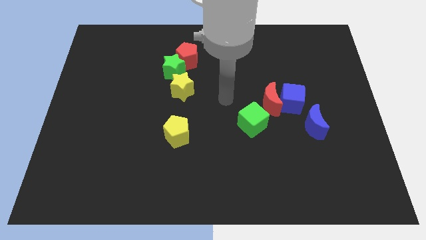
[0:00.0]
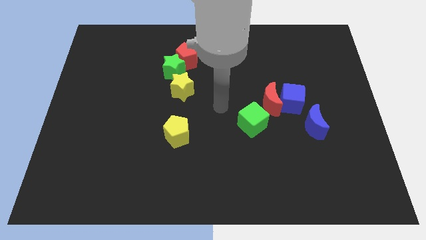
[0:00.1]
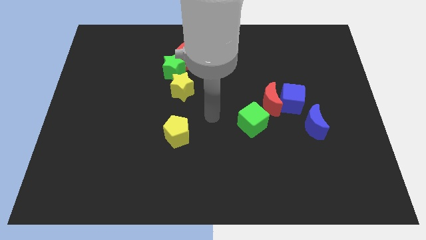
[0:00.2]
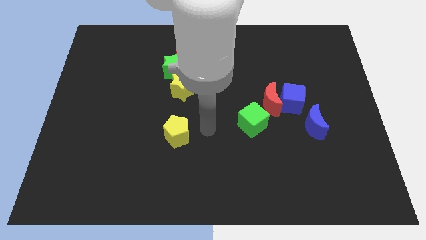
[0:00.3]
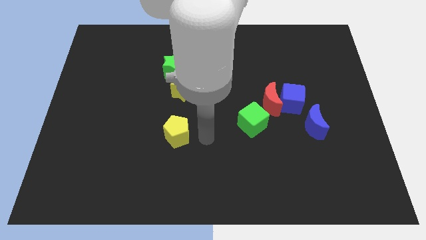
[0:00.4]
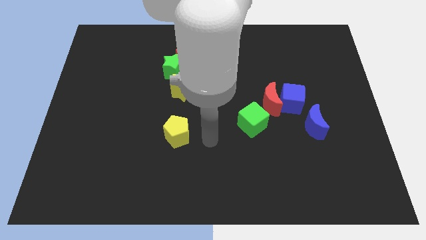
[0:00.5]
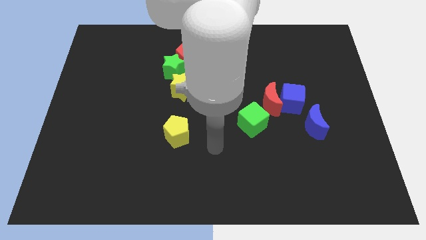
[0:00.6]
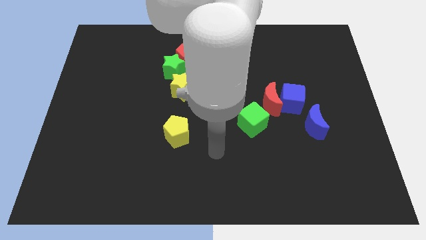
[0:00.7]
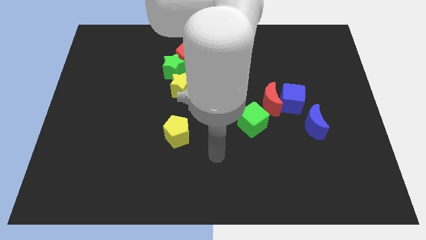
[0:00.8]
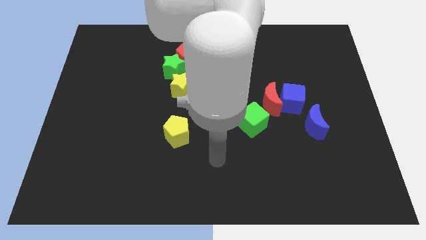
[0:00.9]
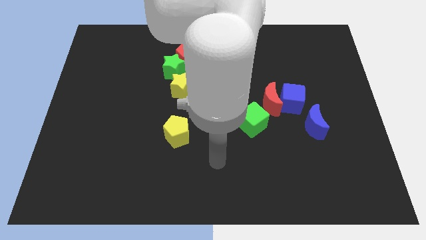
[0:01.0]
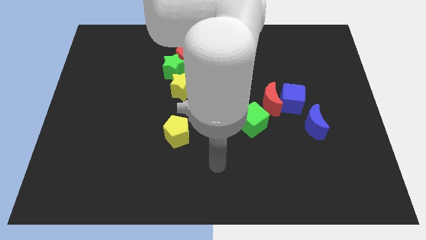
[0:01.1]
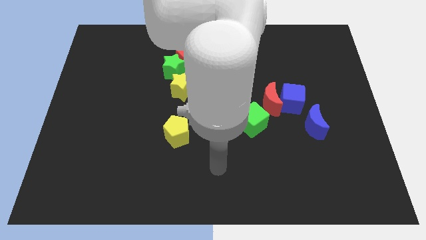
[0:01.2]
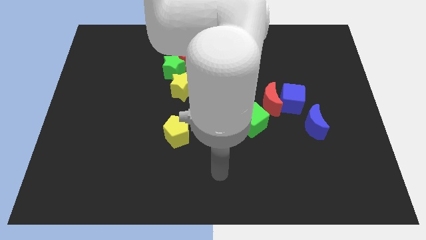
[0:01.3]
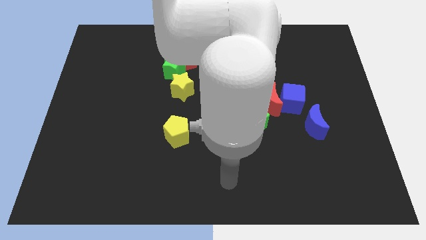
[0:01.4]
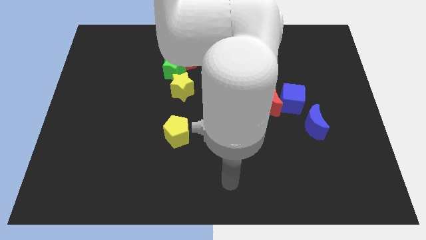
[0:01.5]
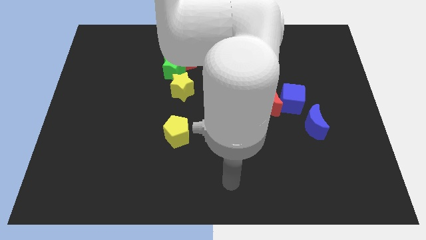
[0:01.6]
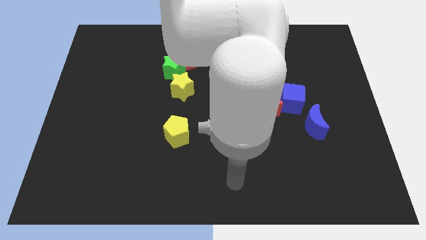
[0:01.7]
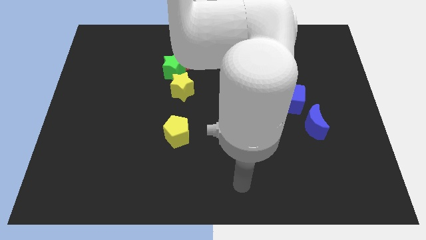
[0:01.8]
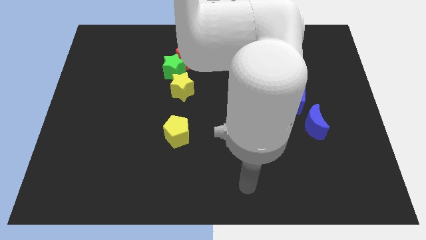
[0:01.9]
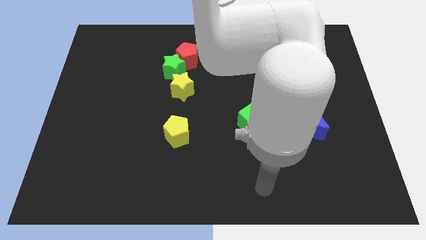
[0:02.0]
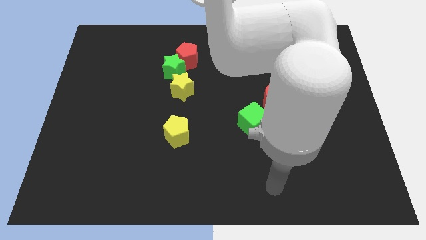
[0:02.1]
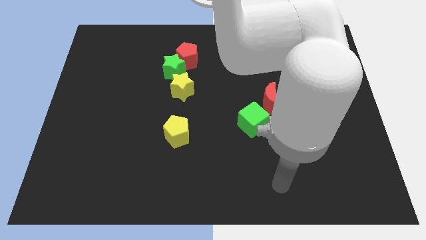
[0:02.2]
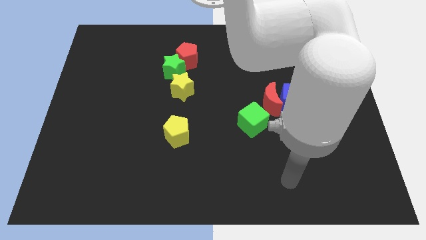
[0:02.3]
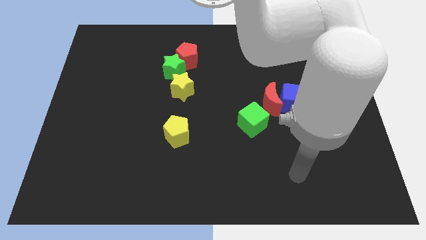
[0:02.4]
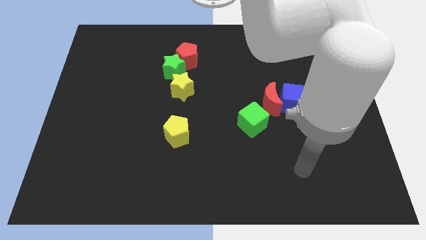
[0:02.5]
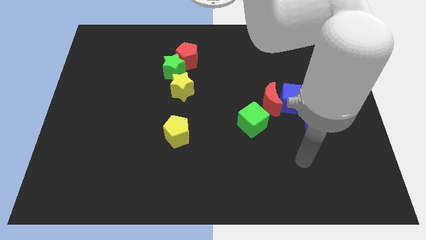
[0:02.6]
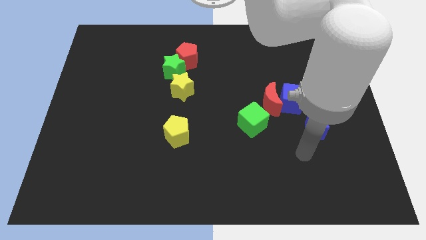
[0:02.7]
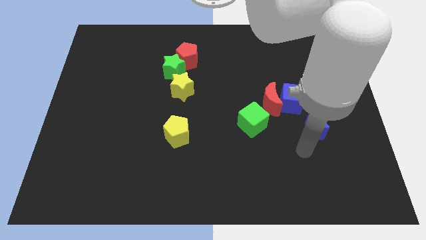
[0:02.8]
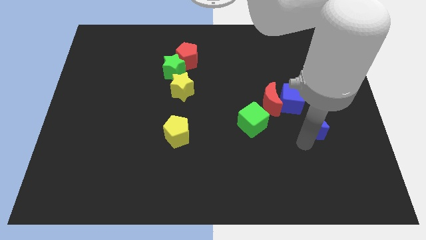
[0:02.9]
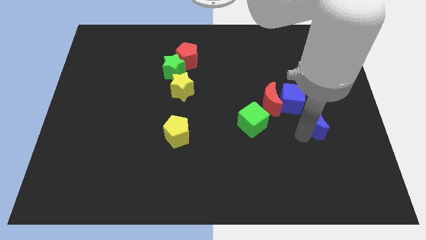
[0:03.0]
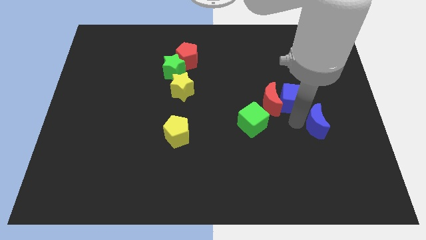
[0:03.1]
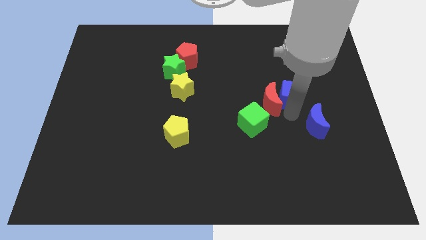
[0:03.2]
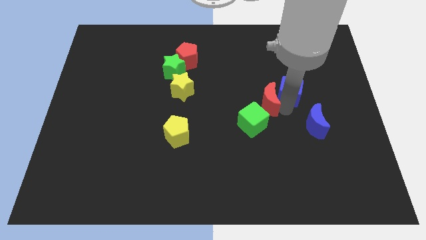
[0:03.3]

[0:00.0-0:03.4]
slightly push the blue blocks to the right of the board

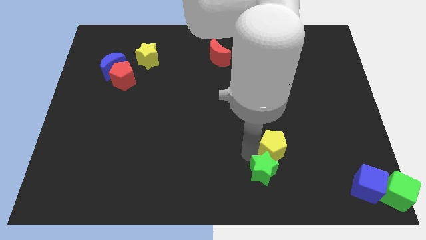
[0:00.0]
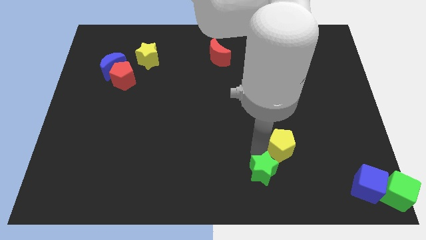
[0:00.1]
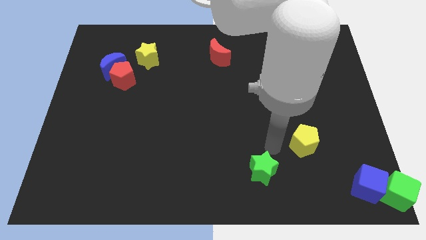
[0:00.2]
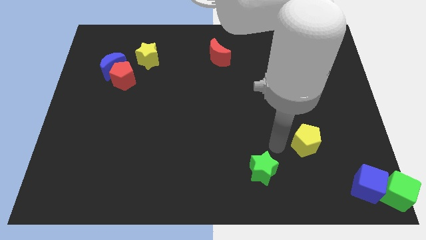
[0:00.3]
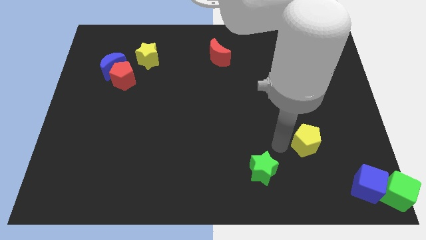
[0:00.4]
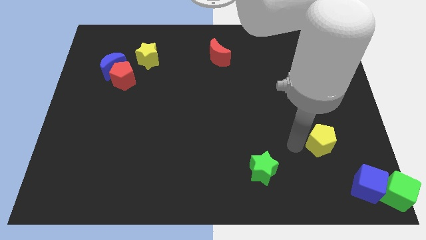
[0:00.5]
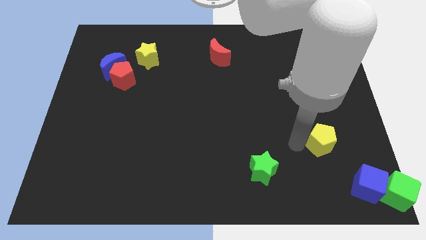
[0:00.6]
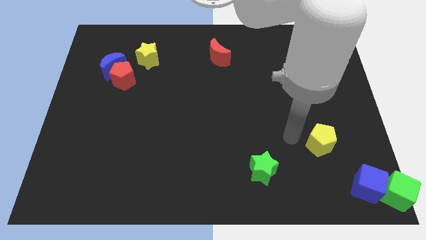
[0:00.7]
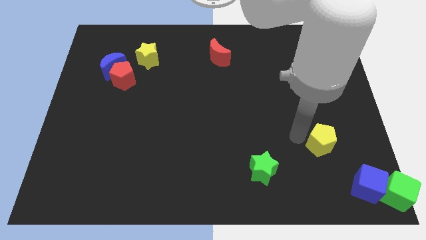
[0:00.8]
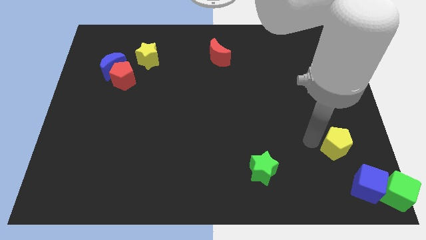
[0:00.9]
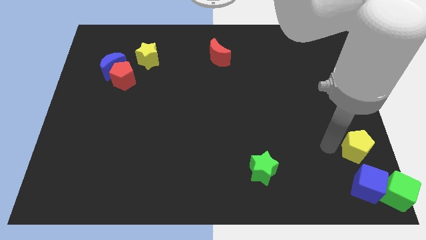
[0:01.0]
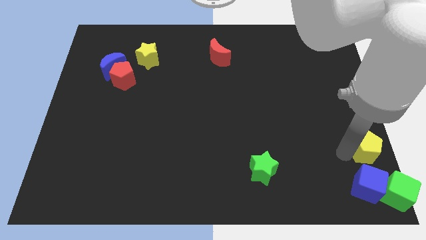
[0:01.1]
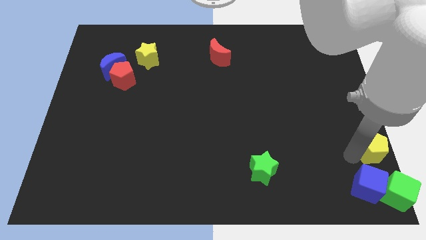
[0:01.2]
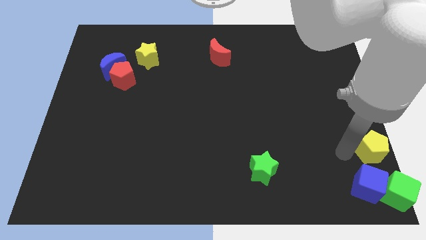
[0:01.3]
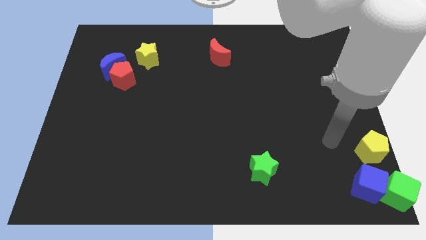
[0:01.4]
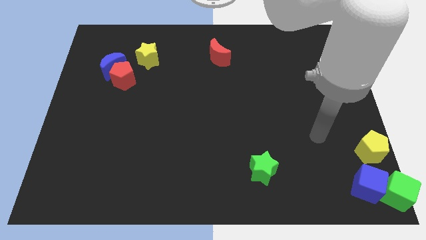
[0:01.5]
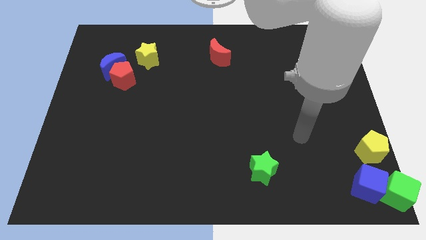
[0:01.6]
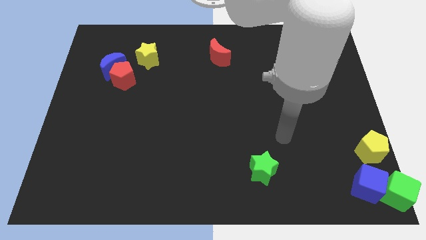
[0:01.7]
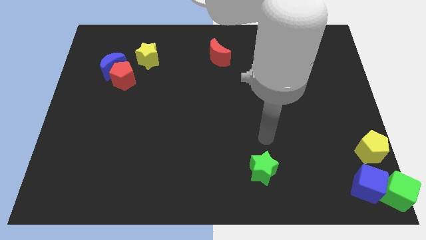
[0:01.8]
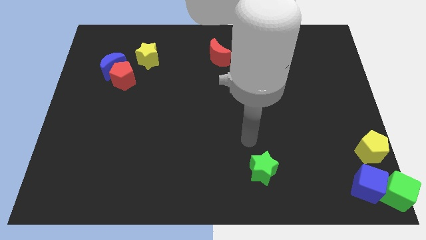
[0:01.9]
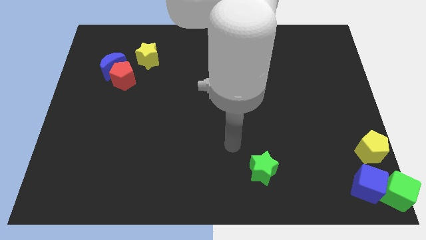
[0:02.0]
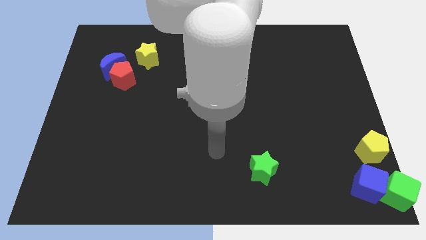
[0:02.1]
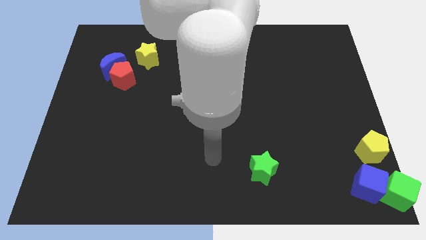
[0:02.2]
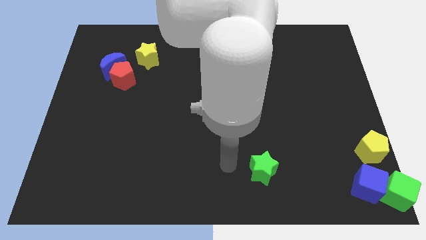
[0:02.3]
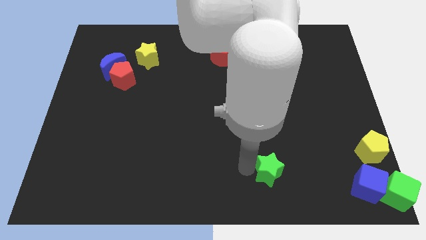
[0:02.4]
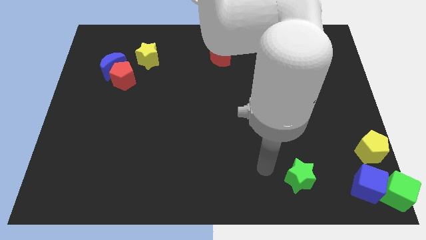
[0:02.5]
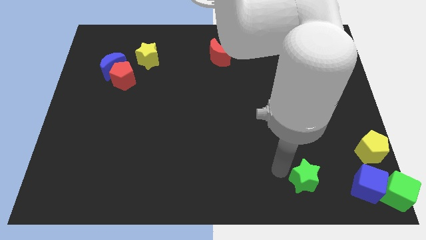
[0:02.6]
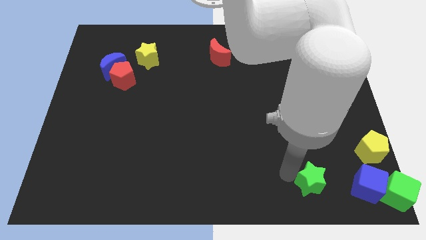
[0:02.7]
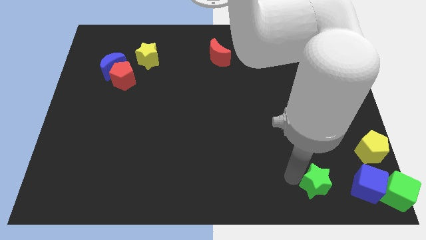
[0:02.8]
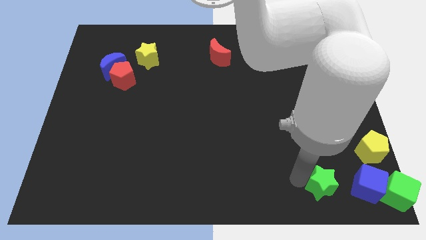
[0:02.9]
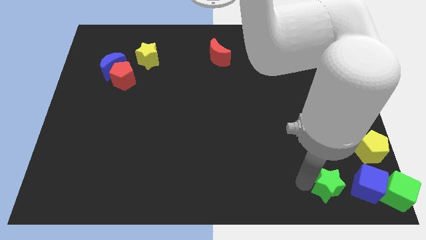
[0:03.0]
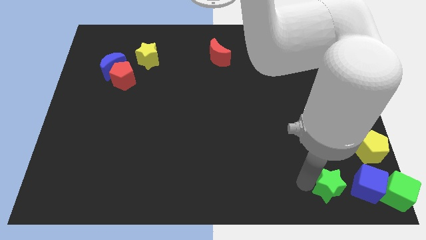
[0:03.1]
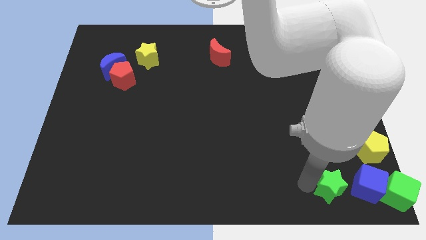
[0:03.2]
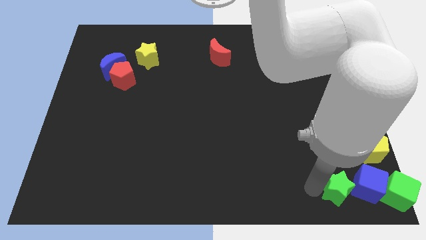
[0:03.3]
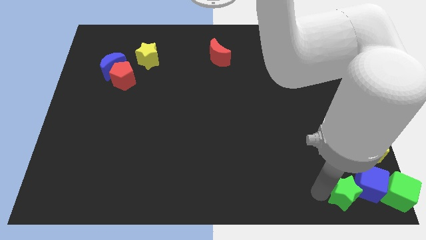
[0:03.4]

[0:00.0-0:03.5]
place green star near to blue cube

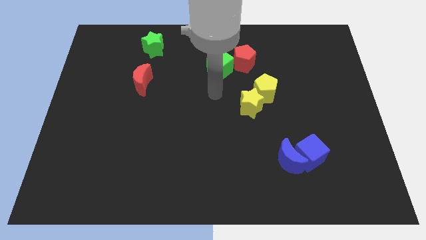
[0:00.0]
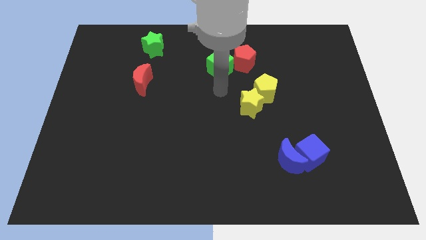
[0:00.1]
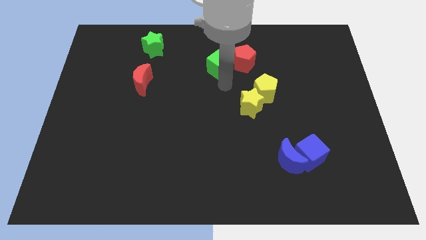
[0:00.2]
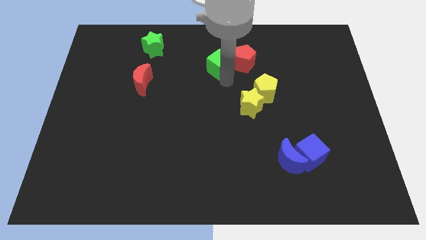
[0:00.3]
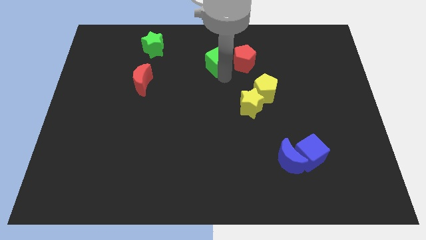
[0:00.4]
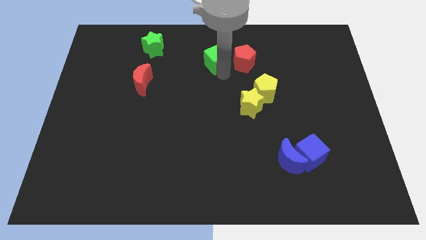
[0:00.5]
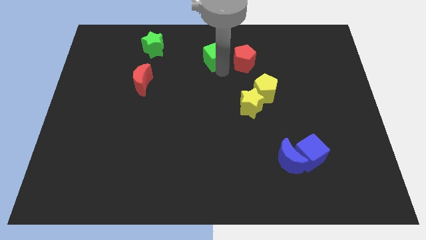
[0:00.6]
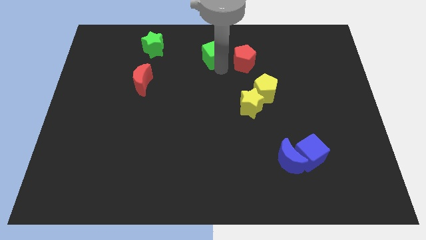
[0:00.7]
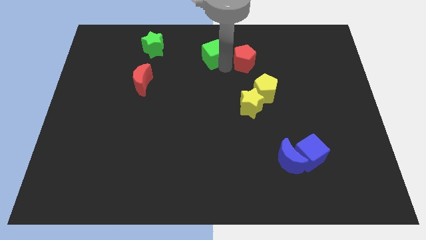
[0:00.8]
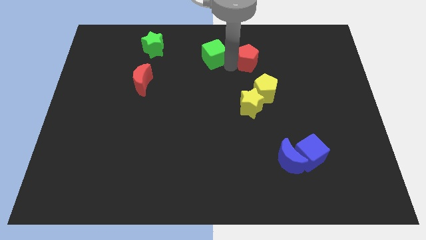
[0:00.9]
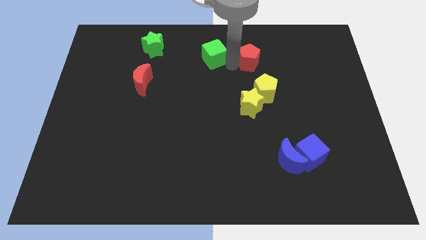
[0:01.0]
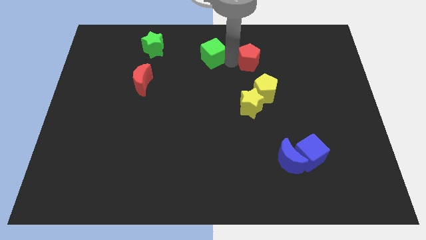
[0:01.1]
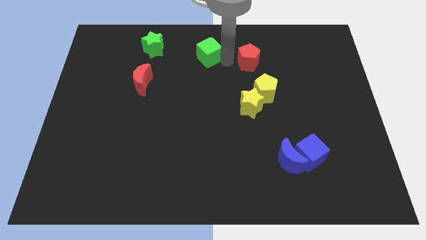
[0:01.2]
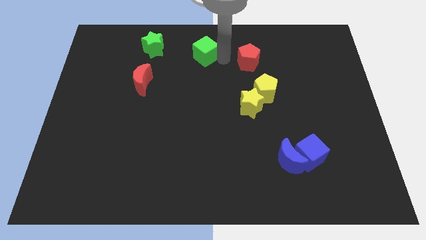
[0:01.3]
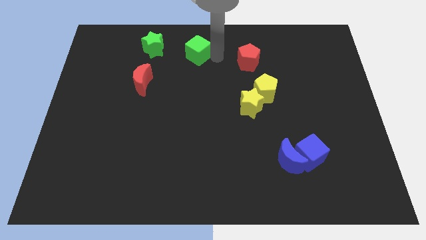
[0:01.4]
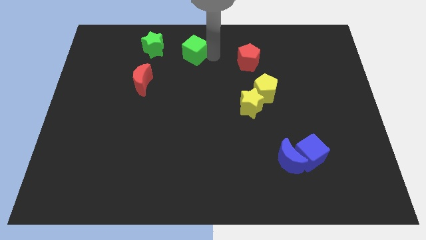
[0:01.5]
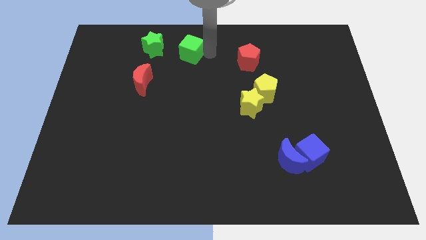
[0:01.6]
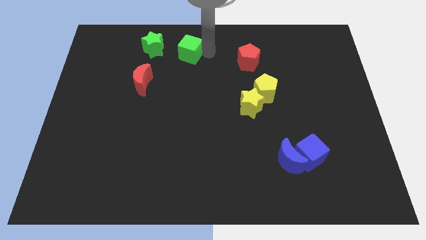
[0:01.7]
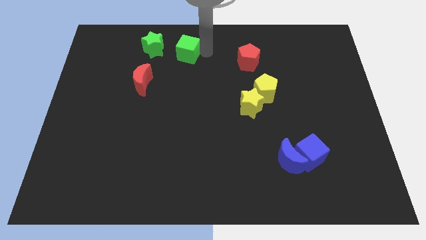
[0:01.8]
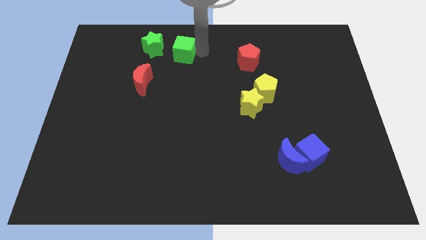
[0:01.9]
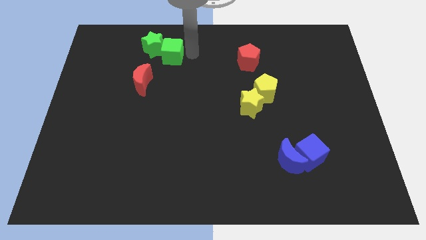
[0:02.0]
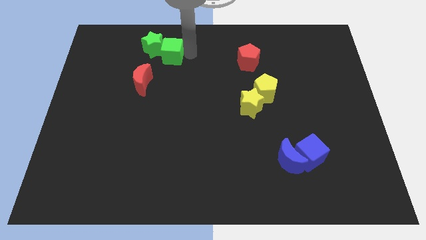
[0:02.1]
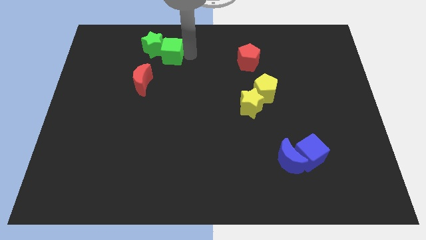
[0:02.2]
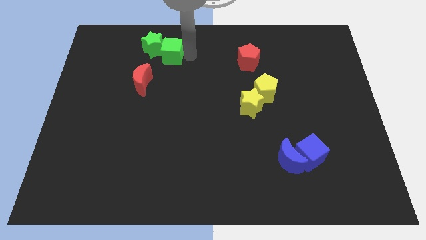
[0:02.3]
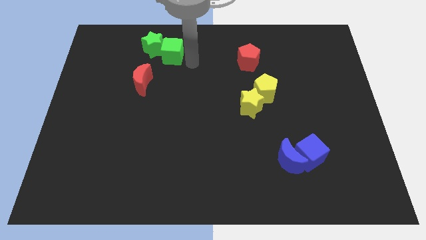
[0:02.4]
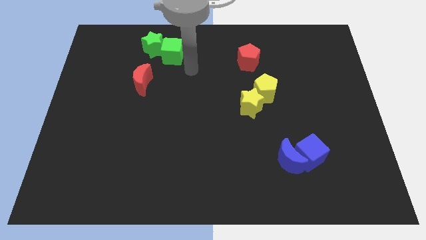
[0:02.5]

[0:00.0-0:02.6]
move the green cube to the bottom right of green star
